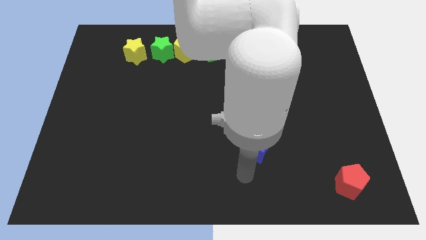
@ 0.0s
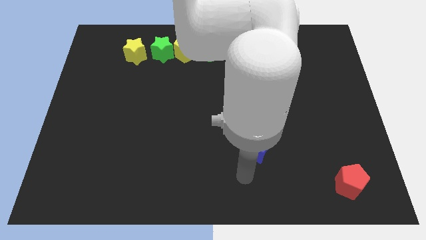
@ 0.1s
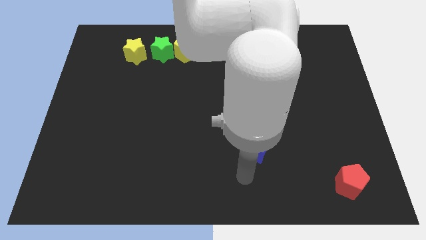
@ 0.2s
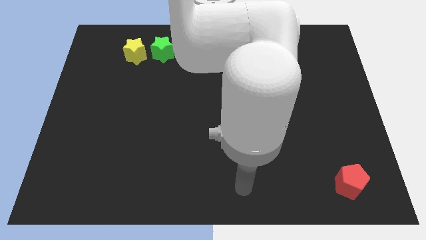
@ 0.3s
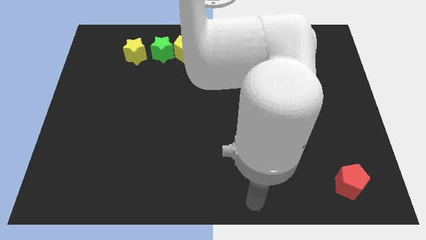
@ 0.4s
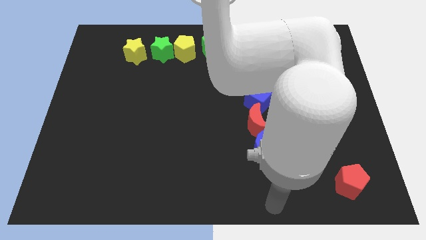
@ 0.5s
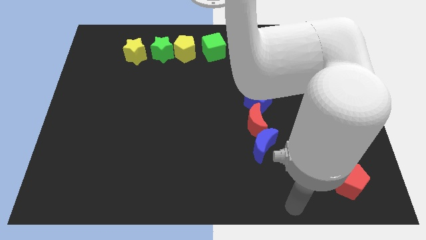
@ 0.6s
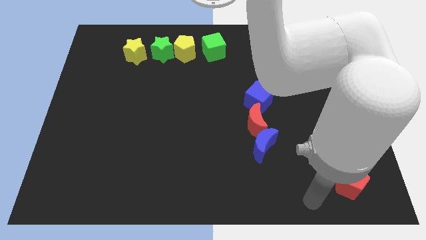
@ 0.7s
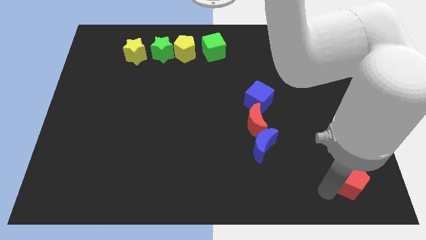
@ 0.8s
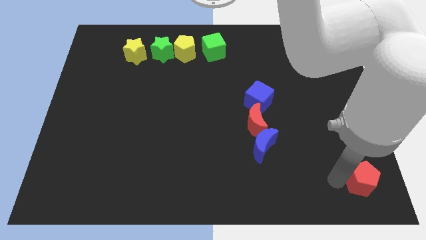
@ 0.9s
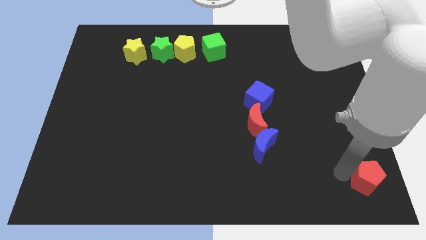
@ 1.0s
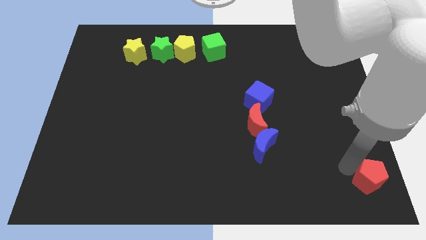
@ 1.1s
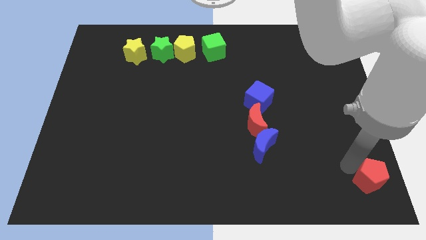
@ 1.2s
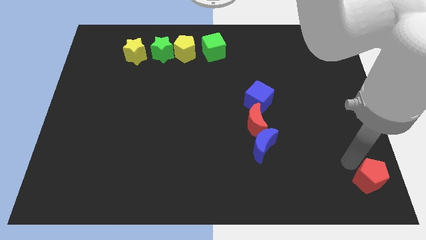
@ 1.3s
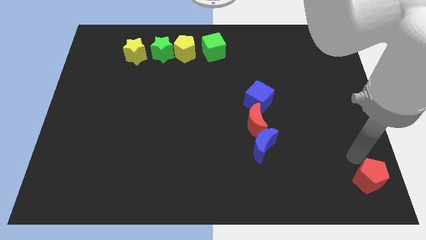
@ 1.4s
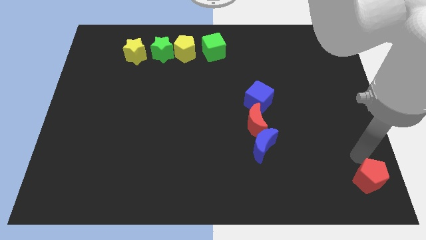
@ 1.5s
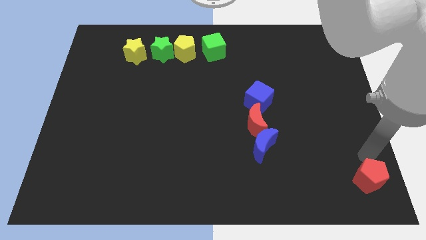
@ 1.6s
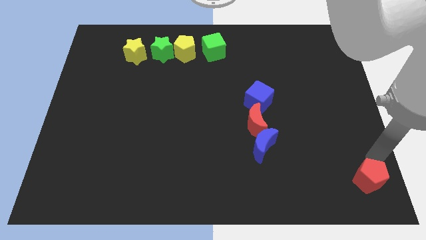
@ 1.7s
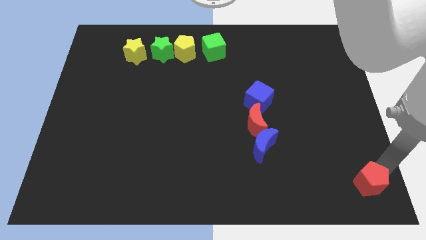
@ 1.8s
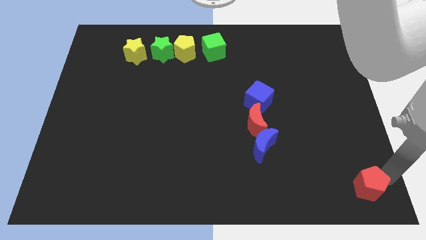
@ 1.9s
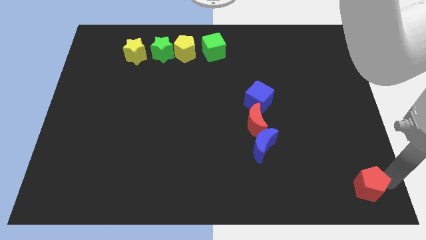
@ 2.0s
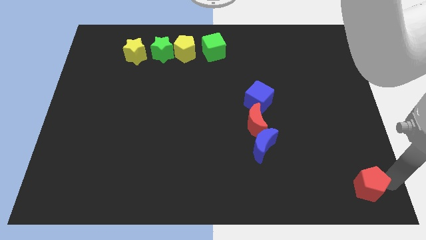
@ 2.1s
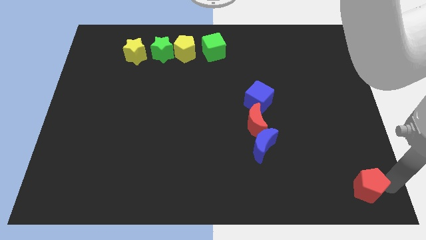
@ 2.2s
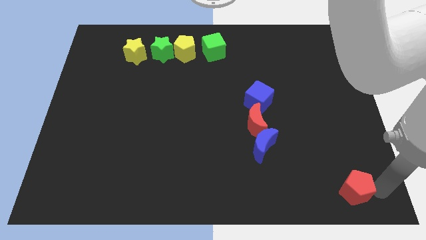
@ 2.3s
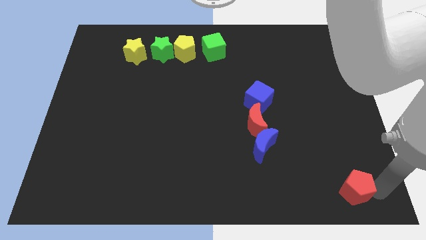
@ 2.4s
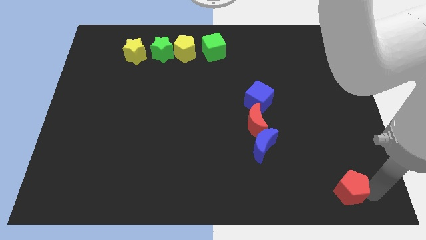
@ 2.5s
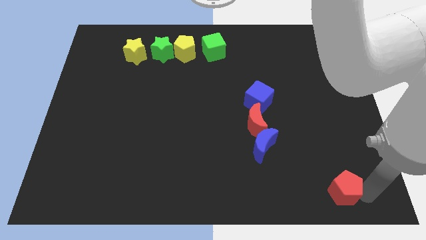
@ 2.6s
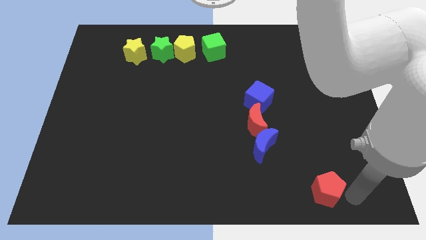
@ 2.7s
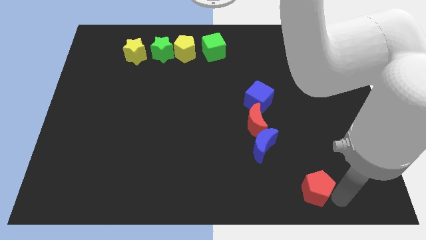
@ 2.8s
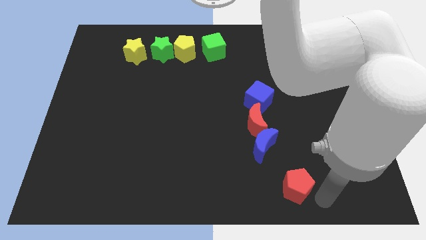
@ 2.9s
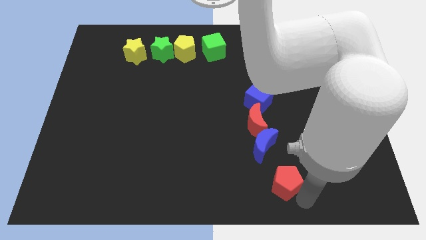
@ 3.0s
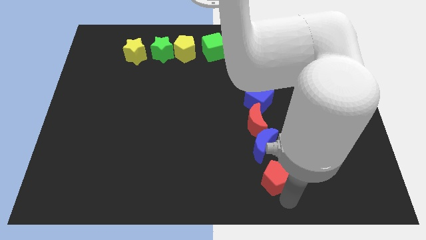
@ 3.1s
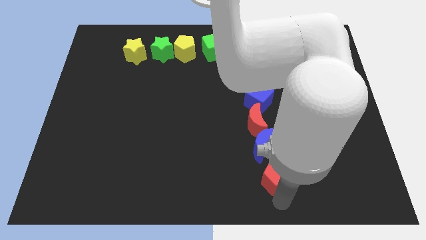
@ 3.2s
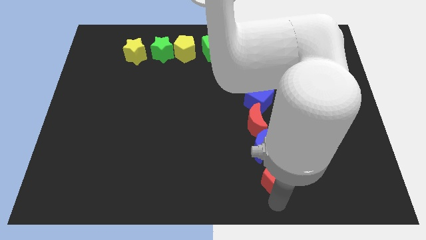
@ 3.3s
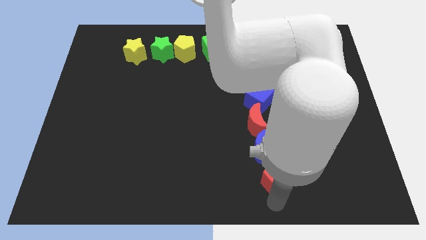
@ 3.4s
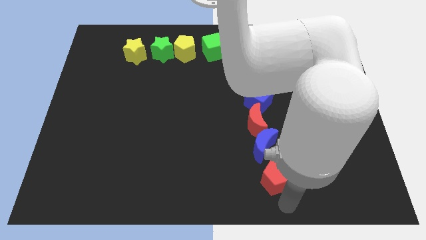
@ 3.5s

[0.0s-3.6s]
slide the red pentagon below the blue crescent

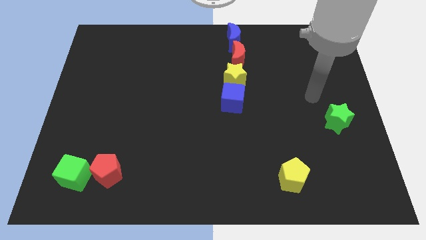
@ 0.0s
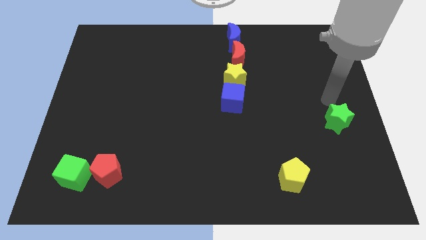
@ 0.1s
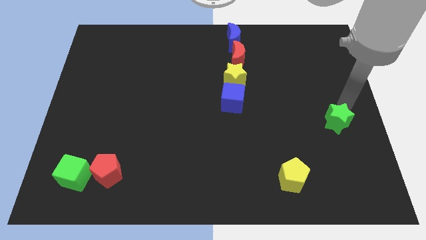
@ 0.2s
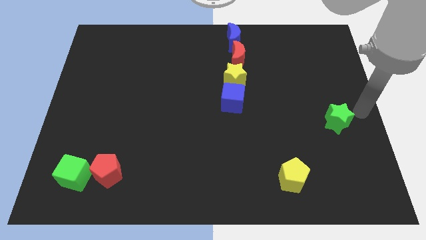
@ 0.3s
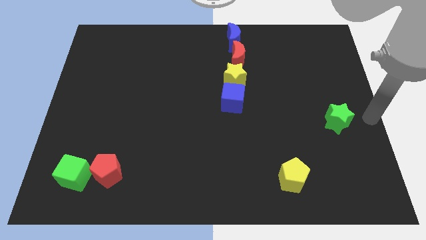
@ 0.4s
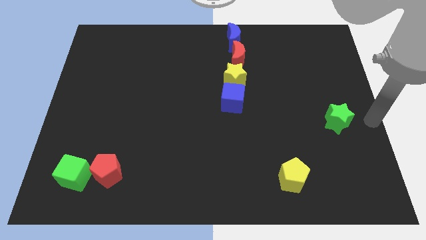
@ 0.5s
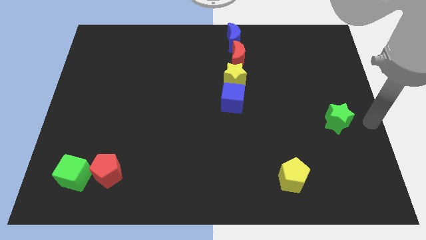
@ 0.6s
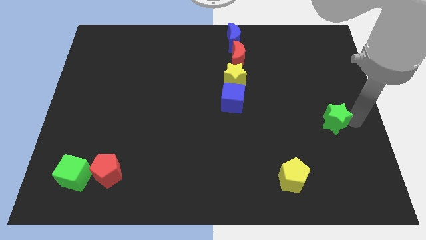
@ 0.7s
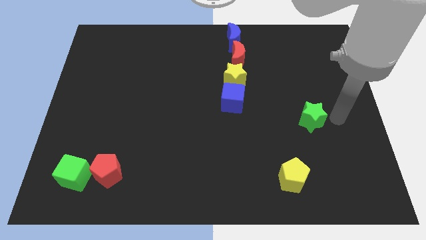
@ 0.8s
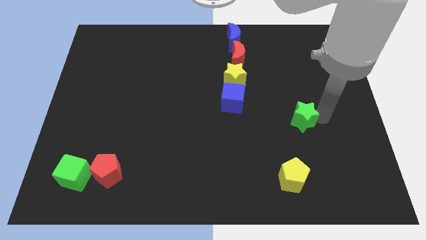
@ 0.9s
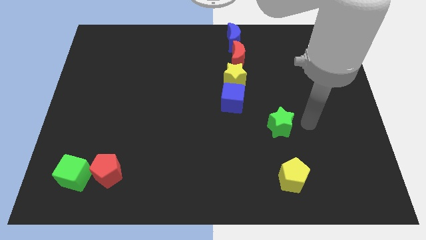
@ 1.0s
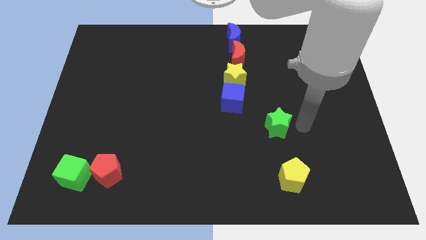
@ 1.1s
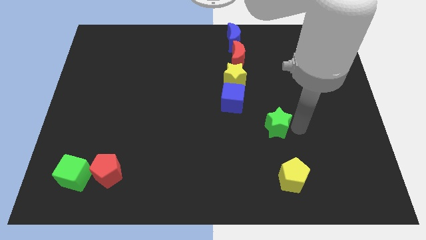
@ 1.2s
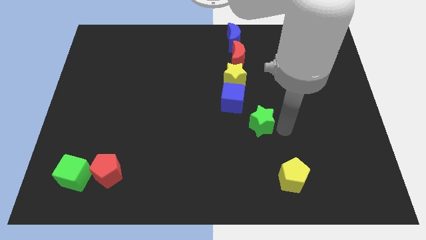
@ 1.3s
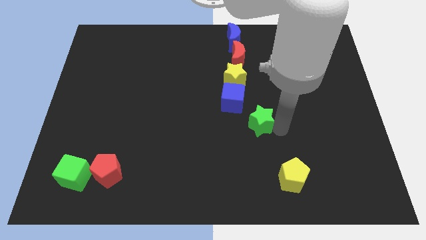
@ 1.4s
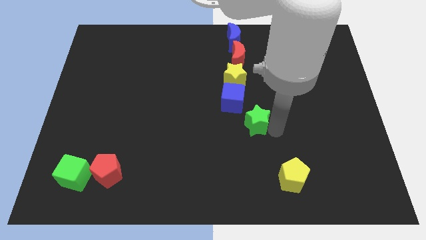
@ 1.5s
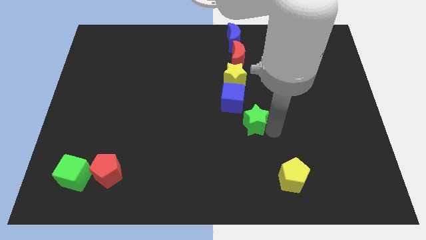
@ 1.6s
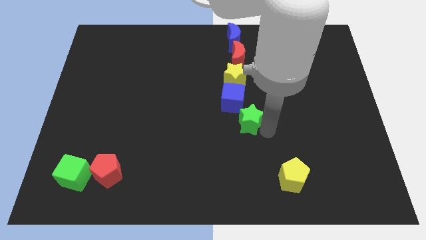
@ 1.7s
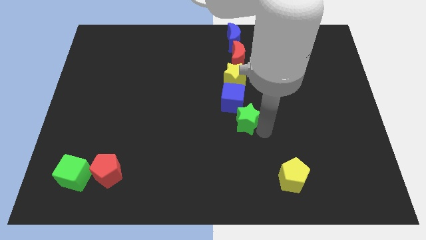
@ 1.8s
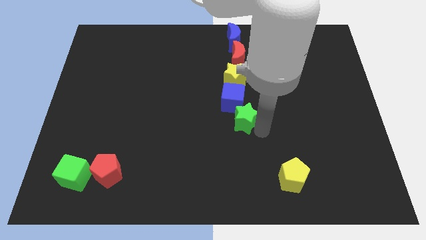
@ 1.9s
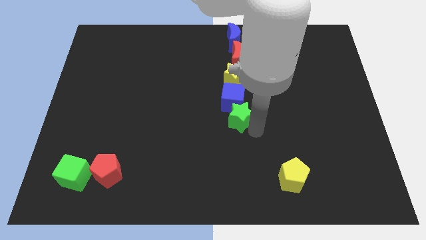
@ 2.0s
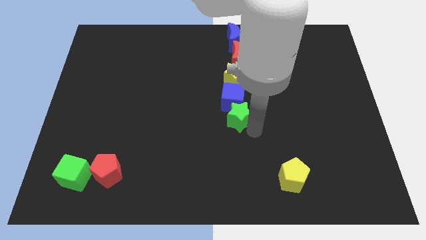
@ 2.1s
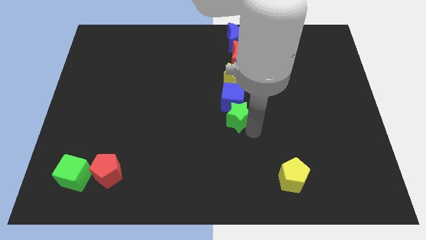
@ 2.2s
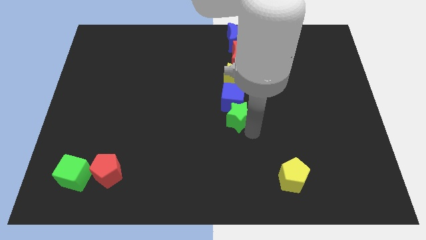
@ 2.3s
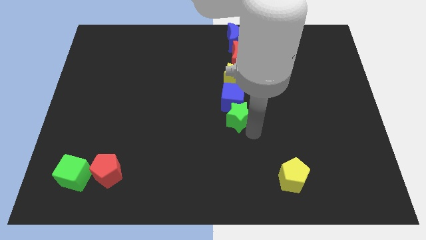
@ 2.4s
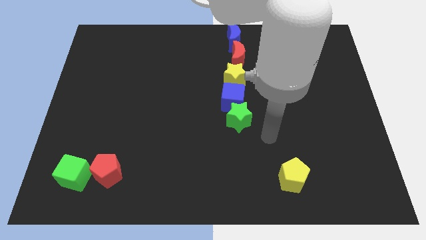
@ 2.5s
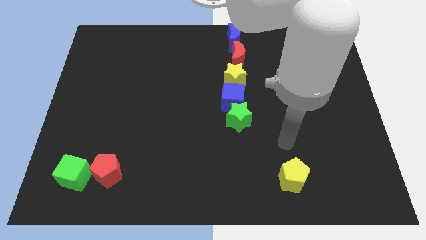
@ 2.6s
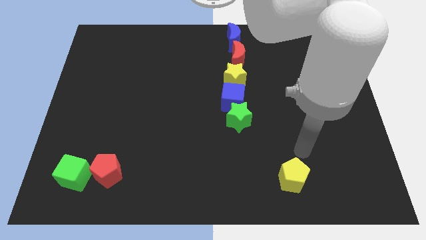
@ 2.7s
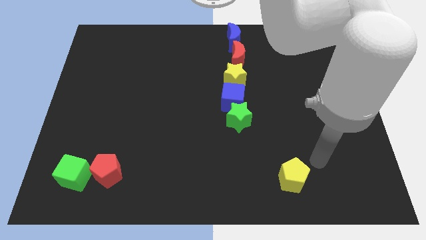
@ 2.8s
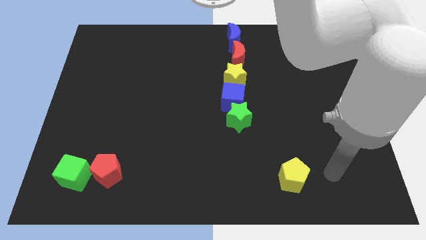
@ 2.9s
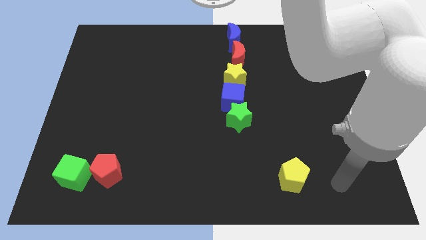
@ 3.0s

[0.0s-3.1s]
push the green star to the bottom of the blue cube

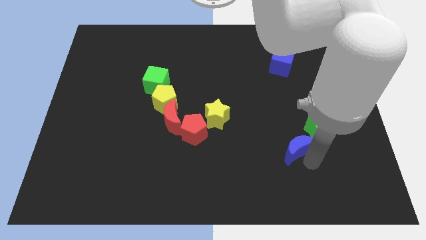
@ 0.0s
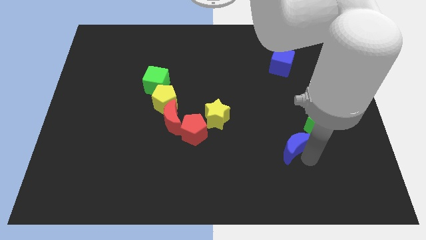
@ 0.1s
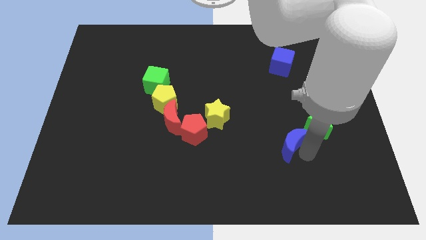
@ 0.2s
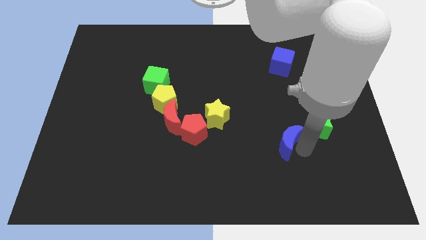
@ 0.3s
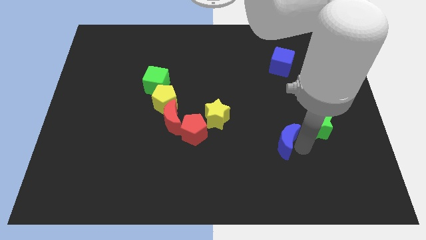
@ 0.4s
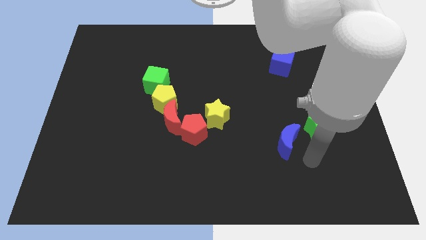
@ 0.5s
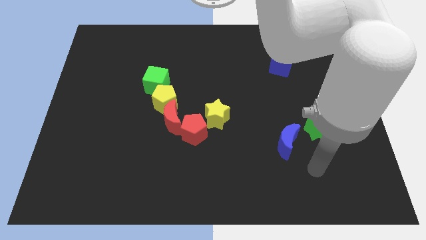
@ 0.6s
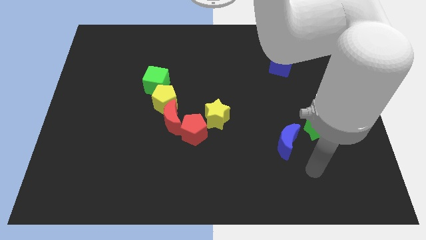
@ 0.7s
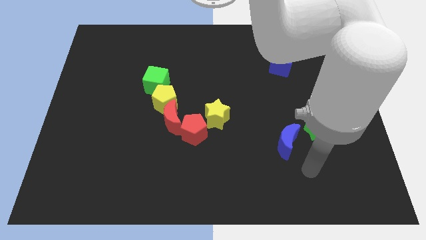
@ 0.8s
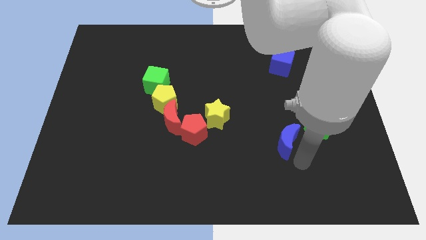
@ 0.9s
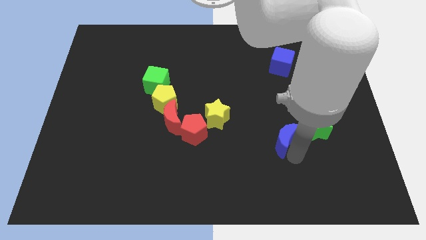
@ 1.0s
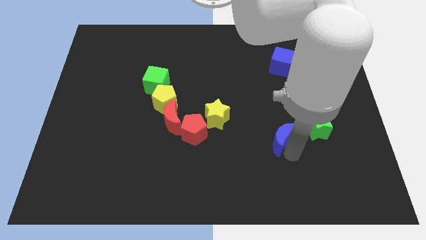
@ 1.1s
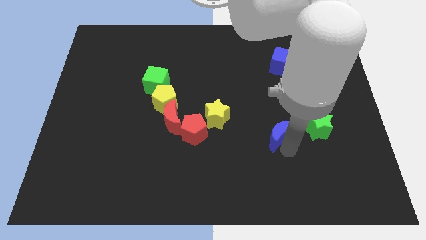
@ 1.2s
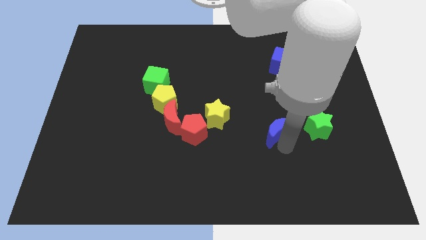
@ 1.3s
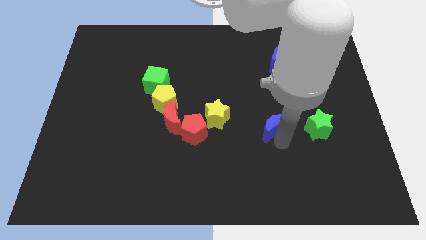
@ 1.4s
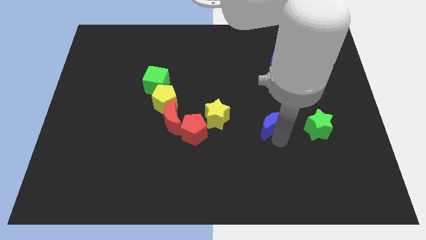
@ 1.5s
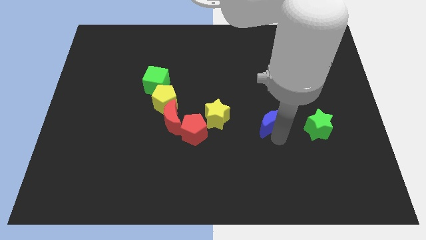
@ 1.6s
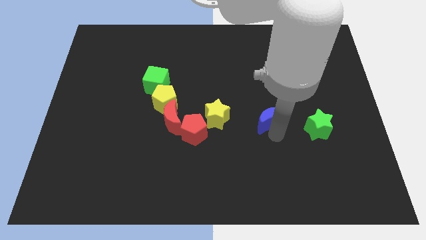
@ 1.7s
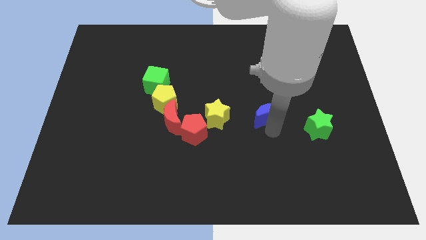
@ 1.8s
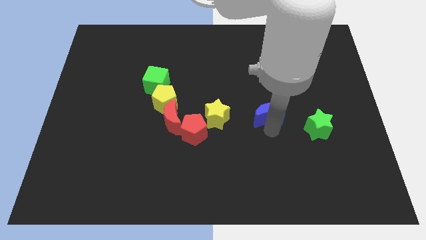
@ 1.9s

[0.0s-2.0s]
push the blue crescent parallel right to the yellow star

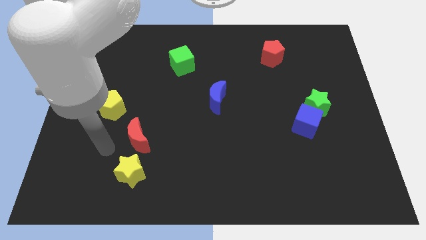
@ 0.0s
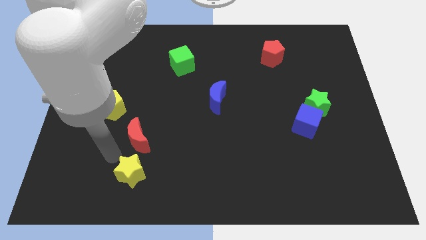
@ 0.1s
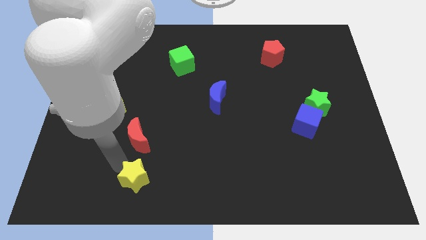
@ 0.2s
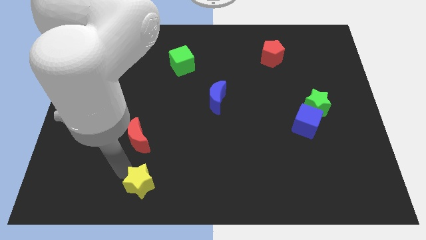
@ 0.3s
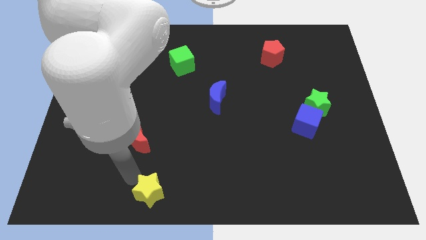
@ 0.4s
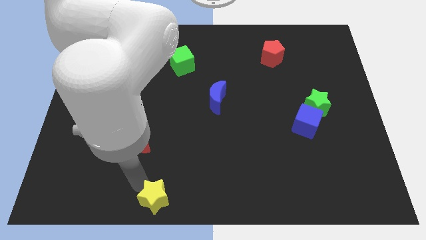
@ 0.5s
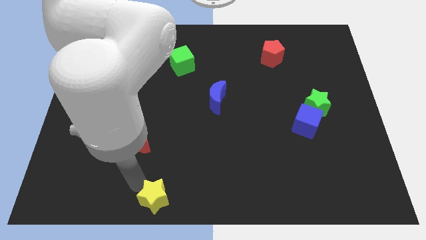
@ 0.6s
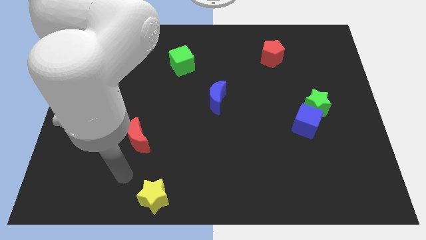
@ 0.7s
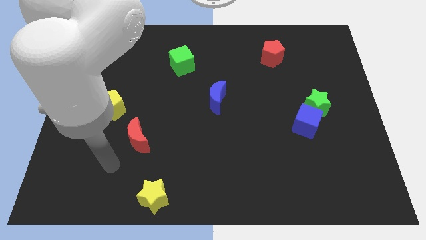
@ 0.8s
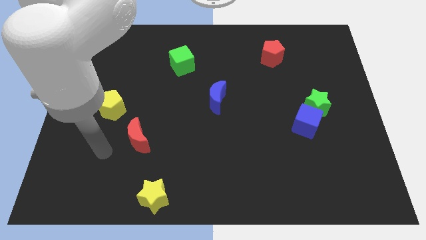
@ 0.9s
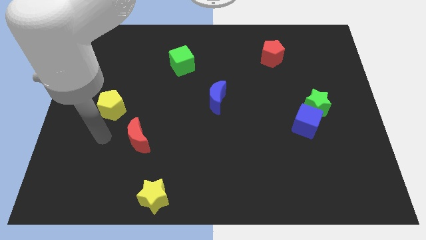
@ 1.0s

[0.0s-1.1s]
move yellow star to the bottom
